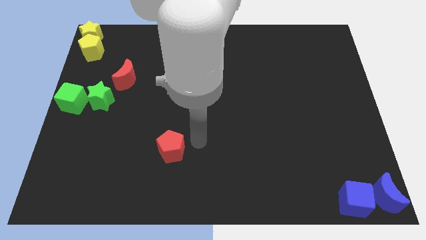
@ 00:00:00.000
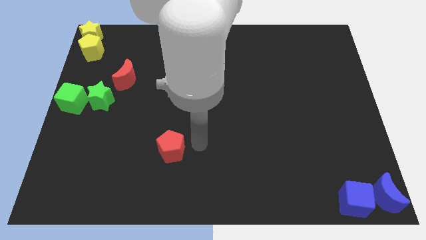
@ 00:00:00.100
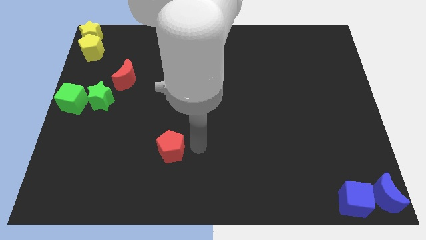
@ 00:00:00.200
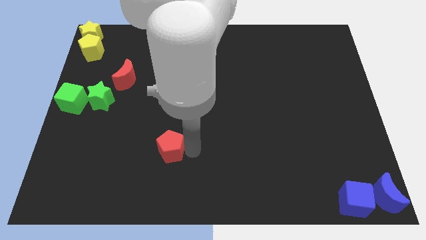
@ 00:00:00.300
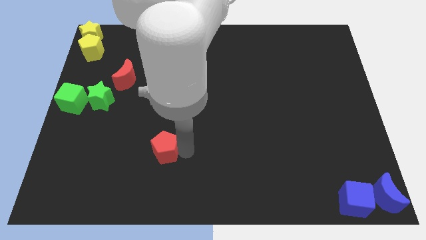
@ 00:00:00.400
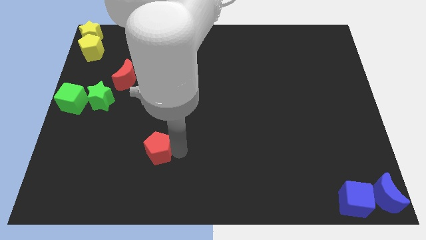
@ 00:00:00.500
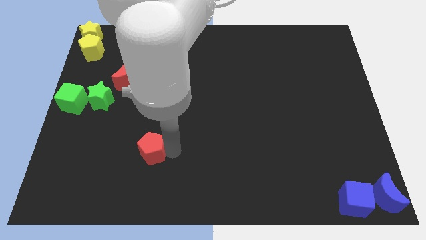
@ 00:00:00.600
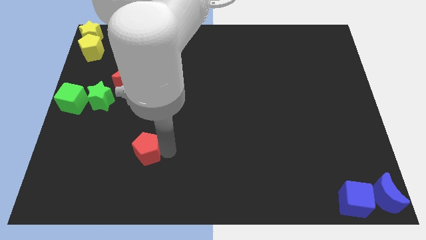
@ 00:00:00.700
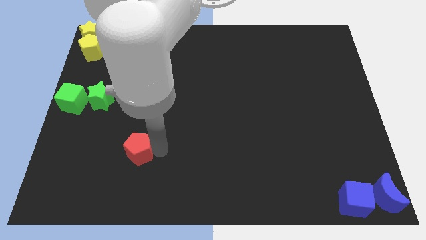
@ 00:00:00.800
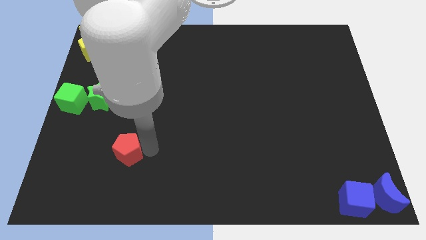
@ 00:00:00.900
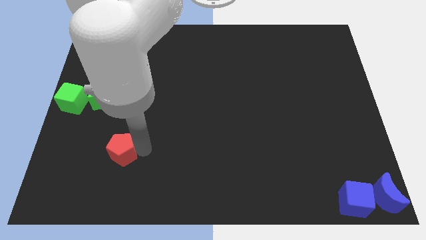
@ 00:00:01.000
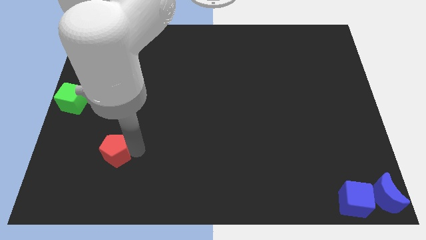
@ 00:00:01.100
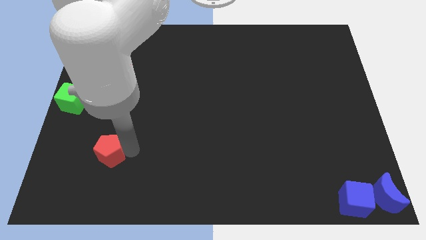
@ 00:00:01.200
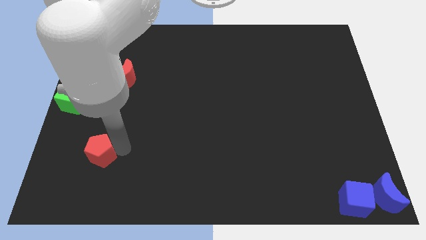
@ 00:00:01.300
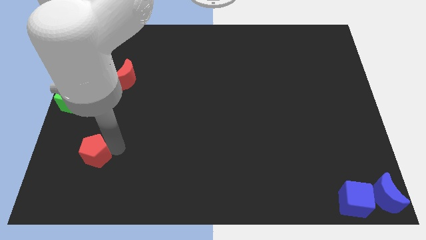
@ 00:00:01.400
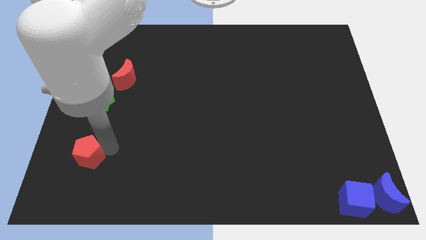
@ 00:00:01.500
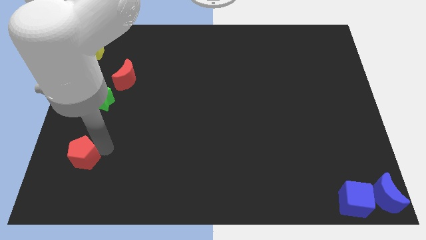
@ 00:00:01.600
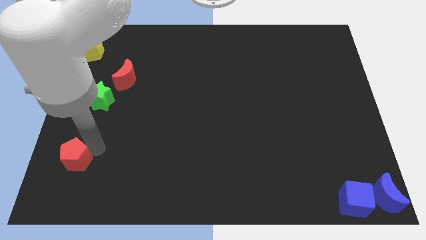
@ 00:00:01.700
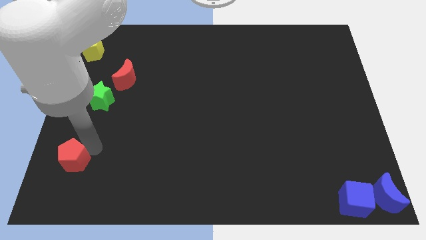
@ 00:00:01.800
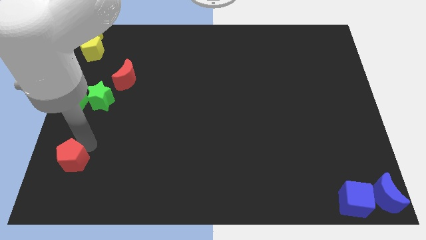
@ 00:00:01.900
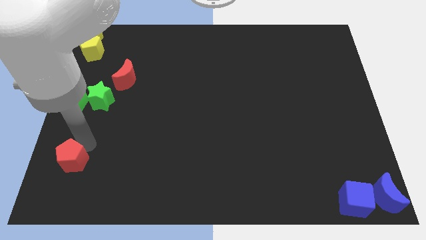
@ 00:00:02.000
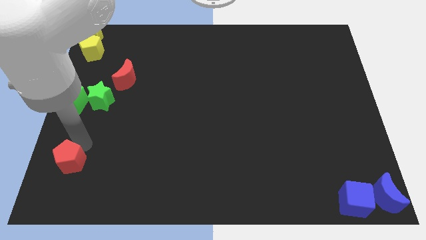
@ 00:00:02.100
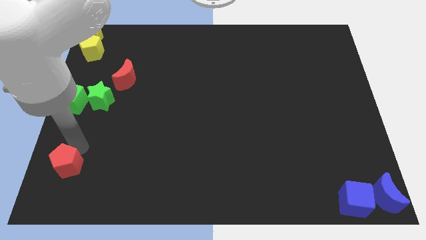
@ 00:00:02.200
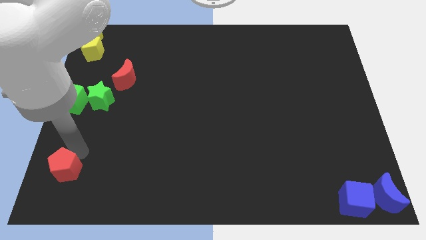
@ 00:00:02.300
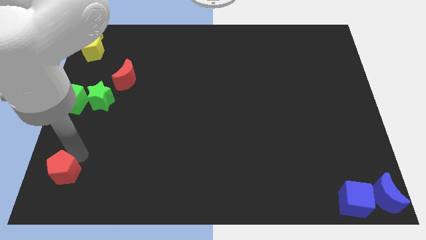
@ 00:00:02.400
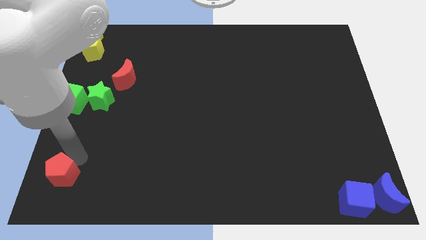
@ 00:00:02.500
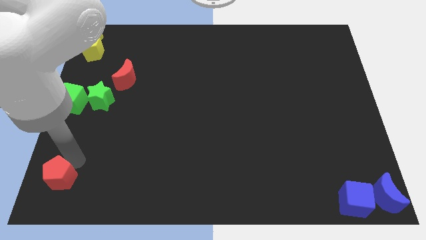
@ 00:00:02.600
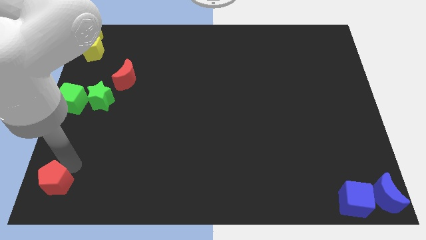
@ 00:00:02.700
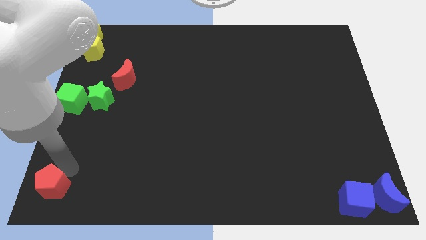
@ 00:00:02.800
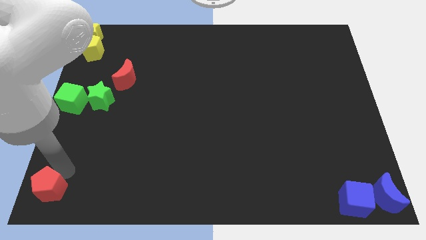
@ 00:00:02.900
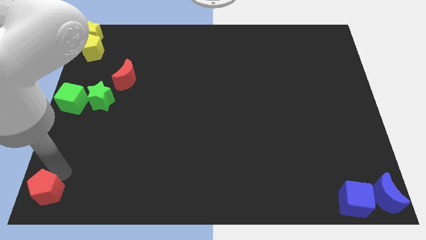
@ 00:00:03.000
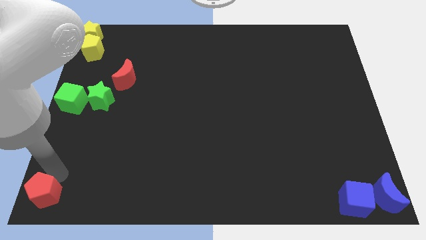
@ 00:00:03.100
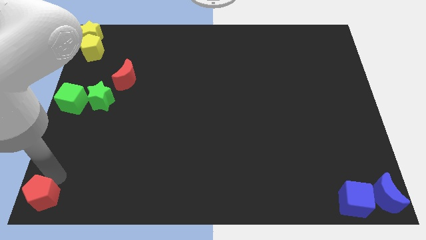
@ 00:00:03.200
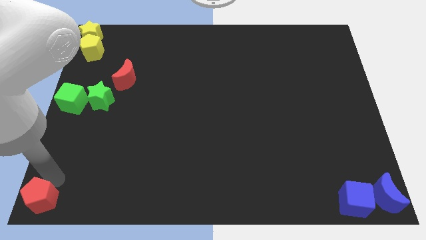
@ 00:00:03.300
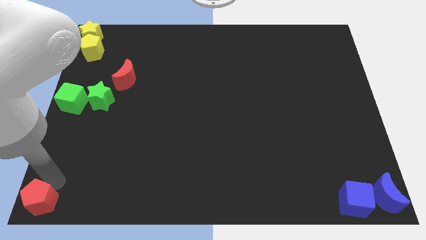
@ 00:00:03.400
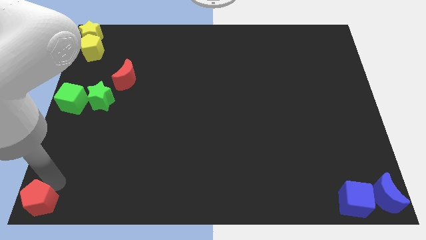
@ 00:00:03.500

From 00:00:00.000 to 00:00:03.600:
move the red pentagon to the bottom left to the board

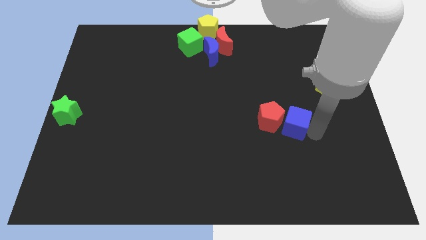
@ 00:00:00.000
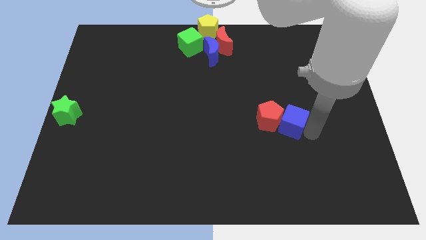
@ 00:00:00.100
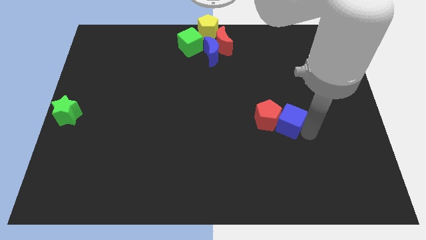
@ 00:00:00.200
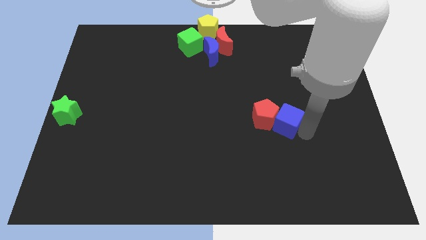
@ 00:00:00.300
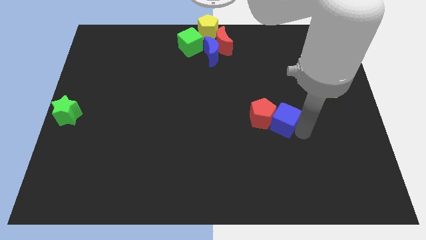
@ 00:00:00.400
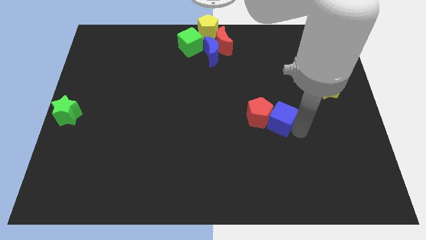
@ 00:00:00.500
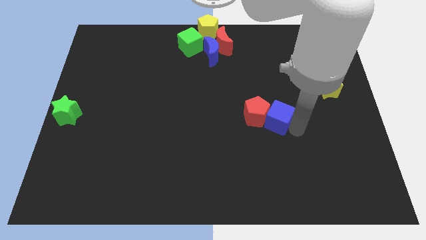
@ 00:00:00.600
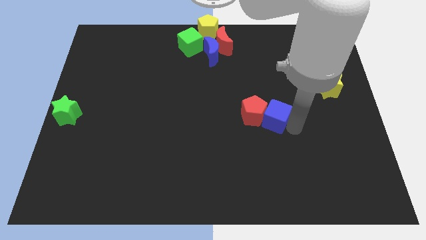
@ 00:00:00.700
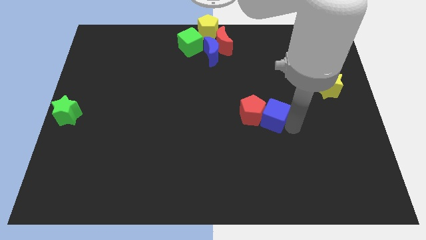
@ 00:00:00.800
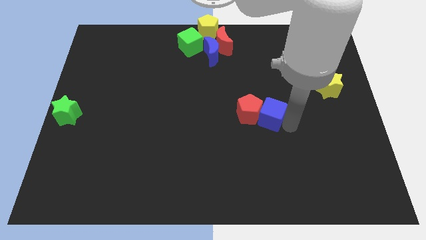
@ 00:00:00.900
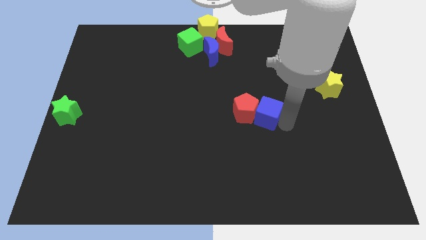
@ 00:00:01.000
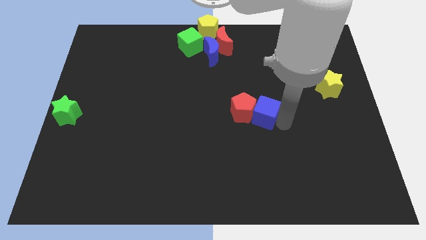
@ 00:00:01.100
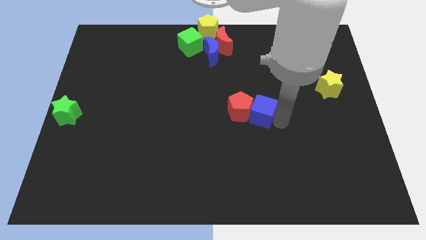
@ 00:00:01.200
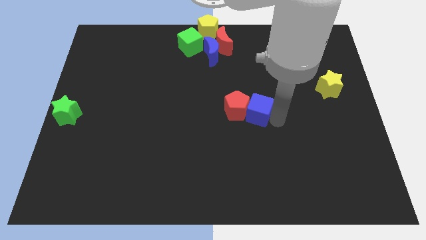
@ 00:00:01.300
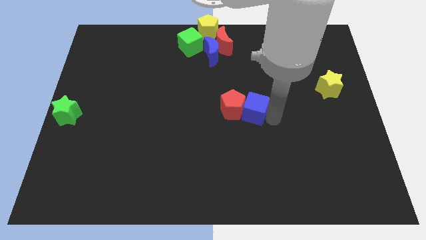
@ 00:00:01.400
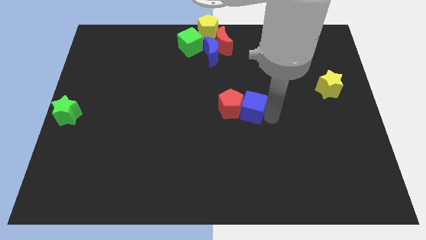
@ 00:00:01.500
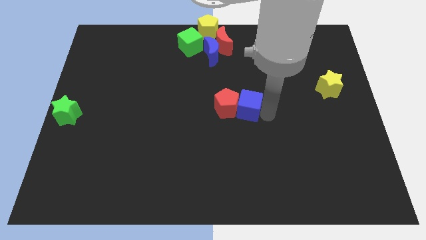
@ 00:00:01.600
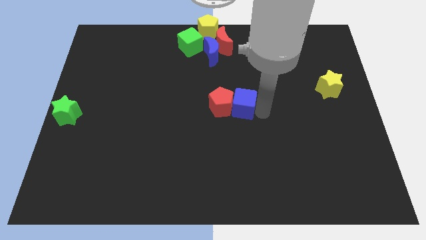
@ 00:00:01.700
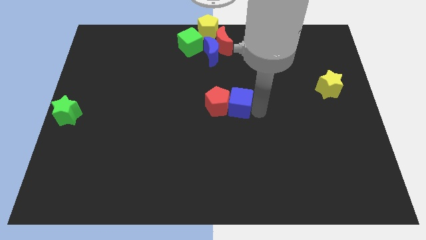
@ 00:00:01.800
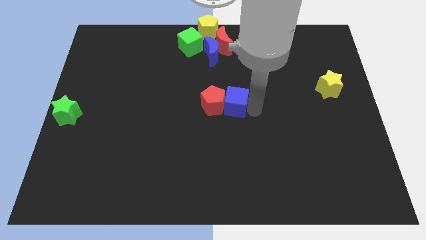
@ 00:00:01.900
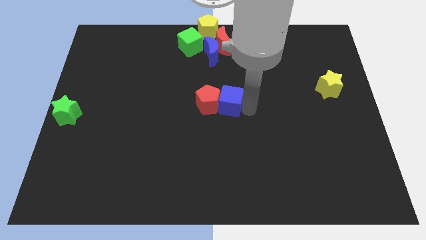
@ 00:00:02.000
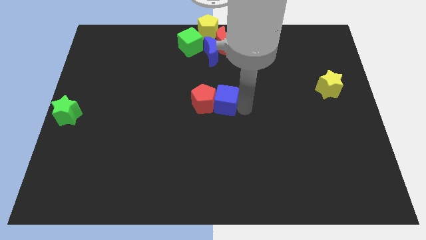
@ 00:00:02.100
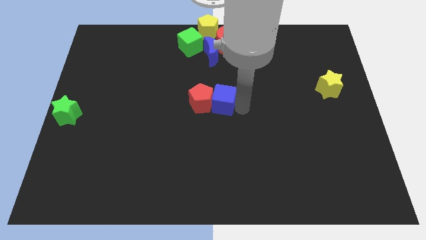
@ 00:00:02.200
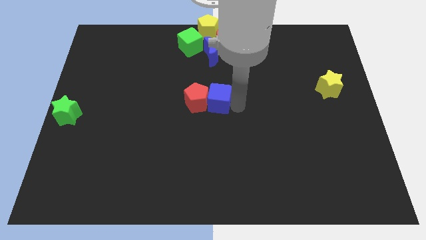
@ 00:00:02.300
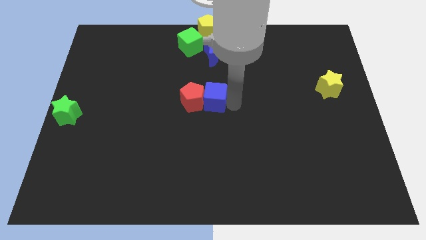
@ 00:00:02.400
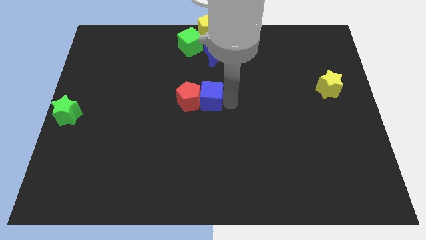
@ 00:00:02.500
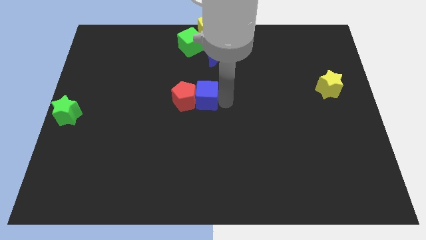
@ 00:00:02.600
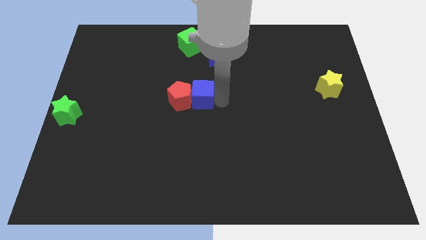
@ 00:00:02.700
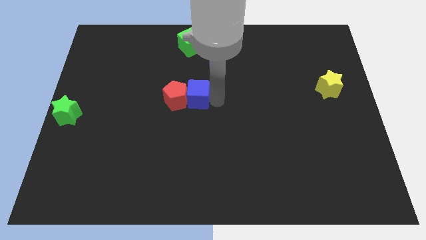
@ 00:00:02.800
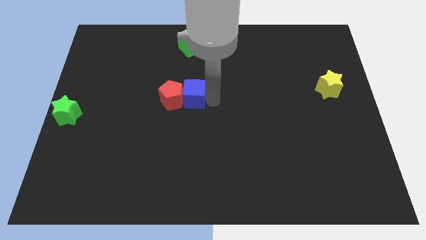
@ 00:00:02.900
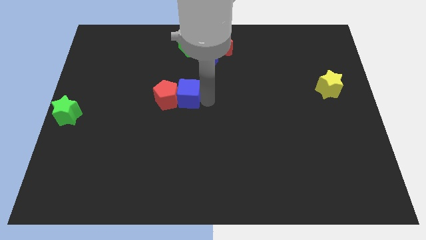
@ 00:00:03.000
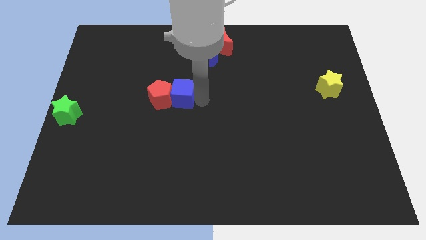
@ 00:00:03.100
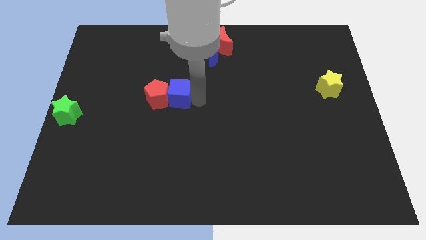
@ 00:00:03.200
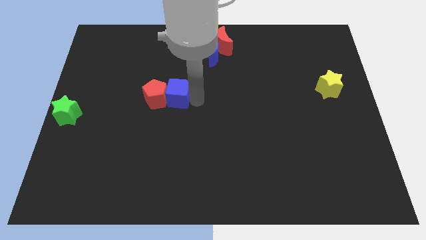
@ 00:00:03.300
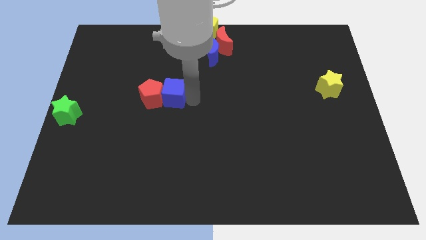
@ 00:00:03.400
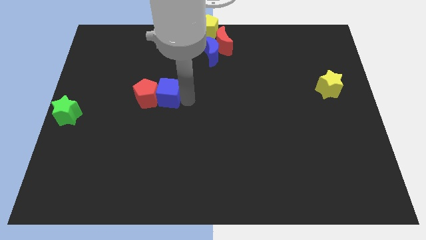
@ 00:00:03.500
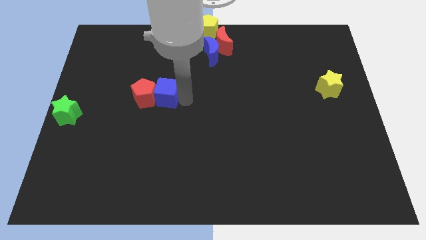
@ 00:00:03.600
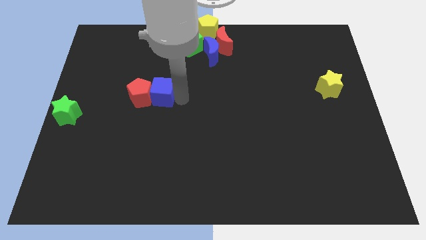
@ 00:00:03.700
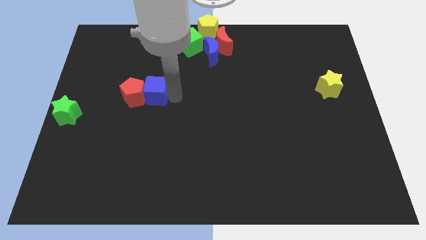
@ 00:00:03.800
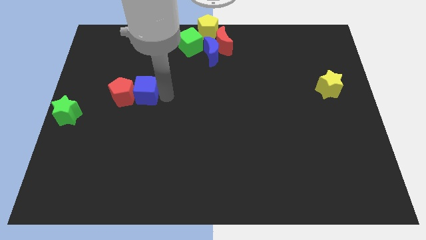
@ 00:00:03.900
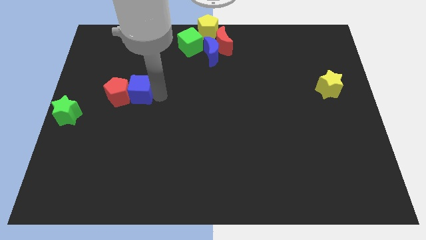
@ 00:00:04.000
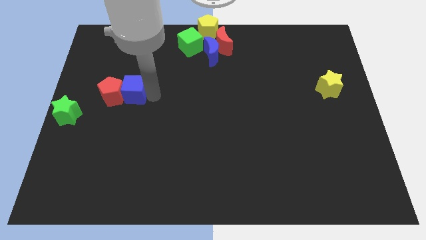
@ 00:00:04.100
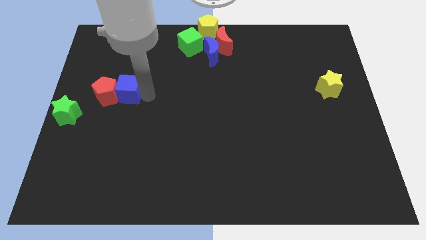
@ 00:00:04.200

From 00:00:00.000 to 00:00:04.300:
push the red pentagon and blue cube towards the left side of the board

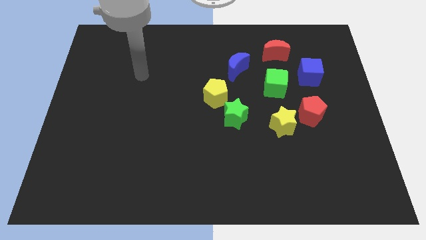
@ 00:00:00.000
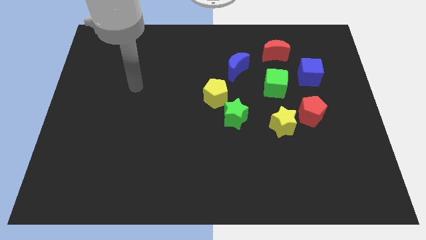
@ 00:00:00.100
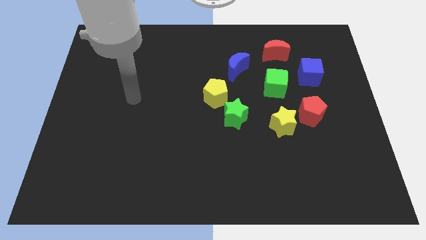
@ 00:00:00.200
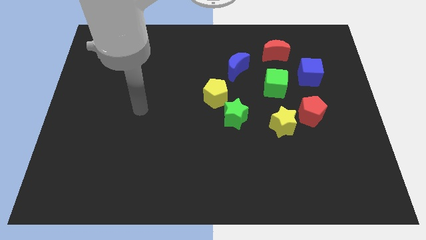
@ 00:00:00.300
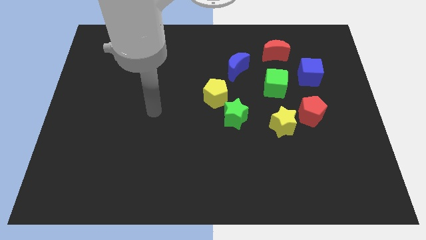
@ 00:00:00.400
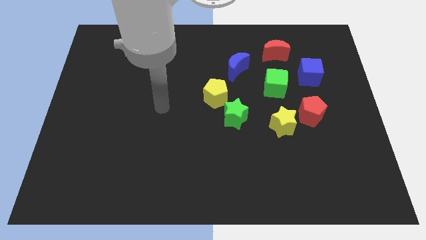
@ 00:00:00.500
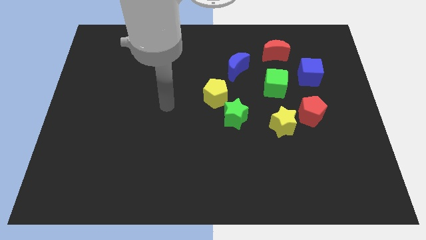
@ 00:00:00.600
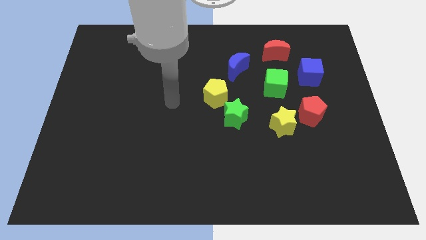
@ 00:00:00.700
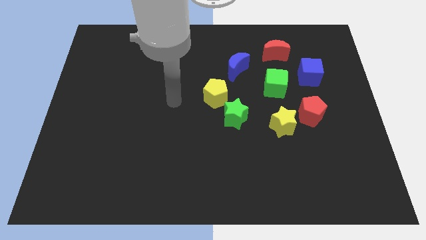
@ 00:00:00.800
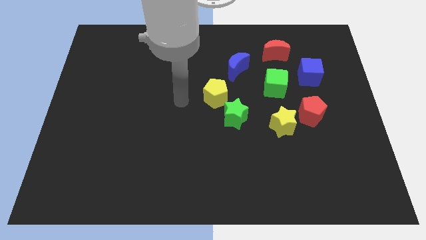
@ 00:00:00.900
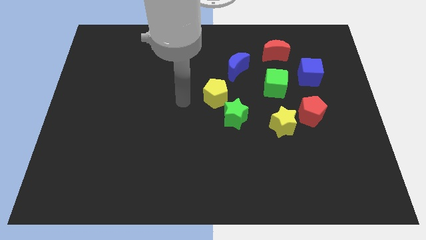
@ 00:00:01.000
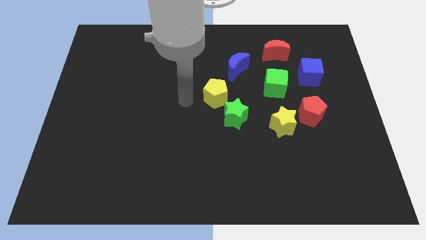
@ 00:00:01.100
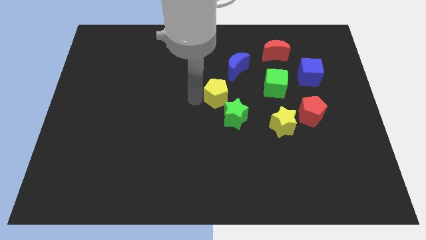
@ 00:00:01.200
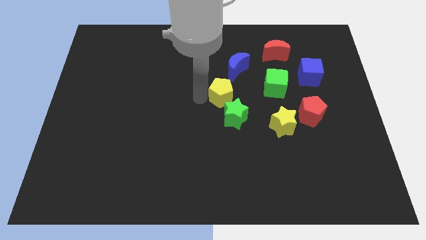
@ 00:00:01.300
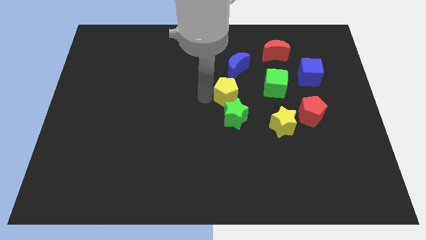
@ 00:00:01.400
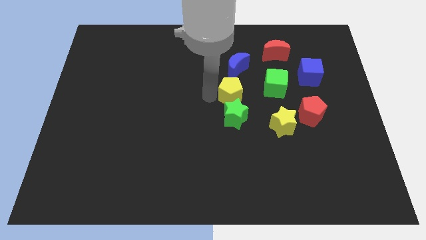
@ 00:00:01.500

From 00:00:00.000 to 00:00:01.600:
place yellow pentagon in between blue moon and green star
